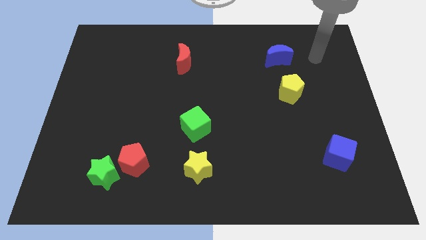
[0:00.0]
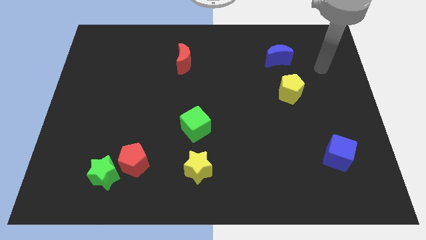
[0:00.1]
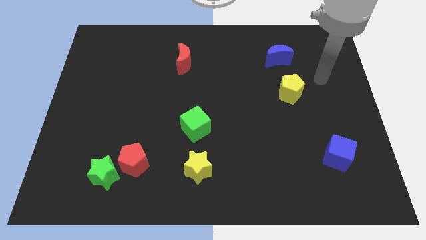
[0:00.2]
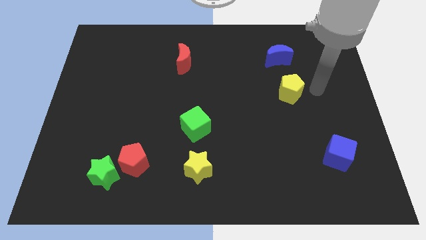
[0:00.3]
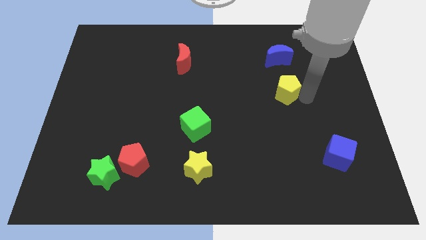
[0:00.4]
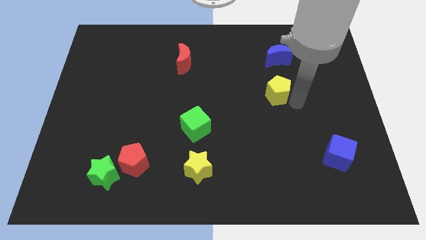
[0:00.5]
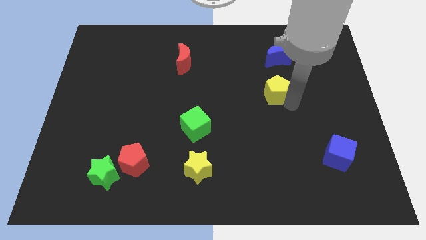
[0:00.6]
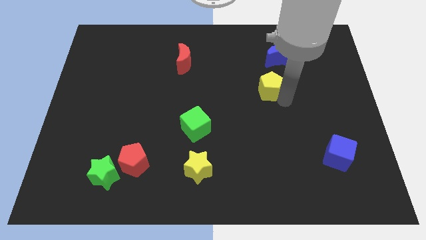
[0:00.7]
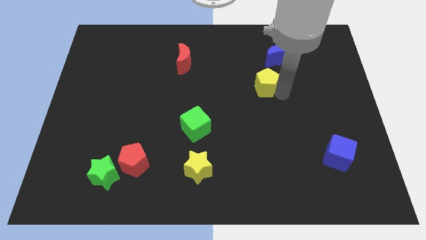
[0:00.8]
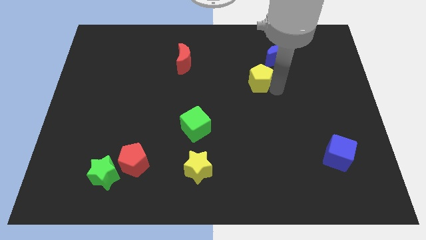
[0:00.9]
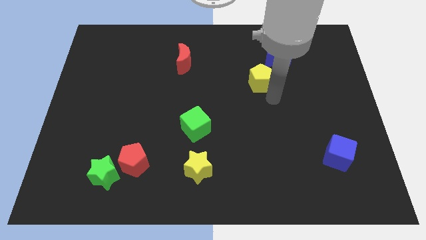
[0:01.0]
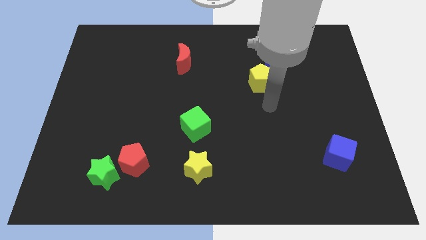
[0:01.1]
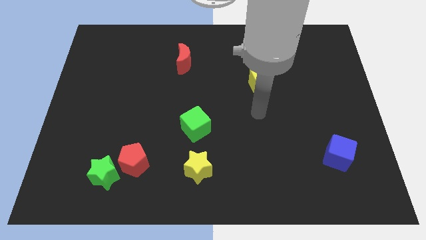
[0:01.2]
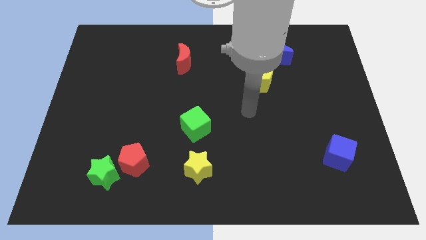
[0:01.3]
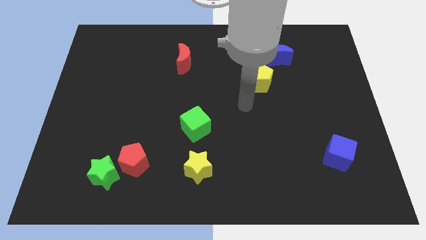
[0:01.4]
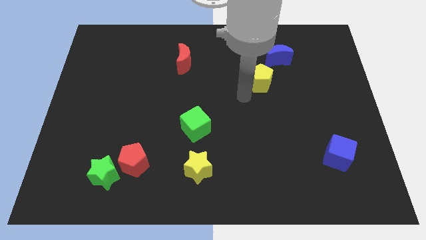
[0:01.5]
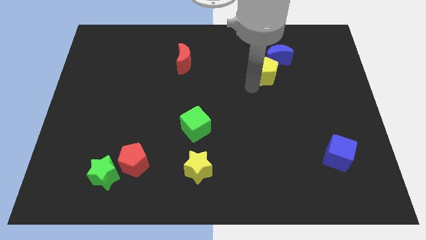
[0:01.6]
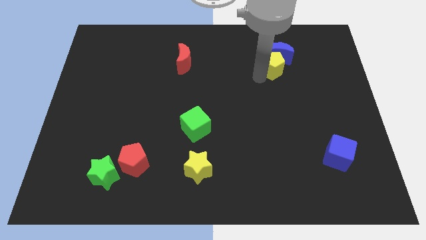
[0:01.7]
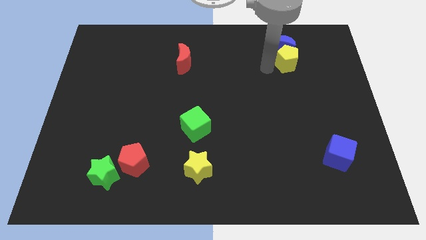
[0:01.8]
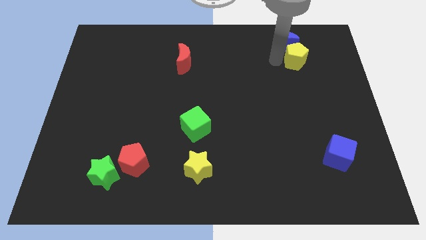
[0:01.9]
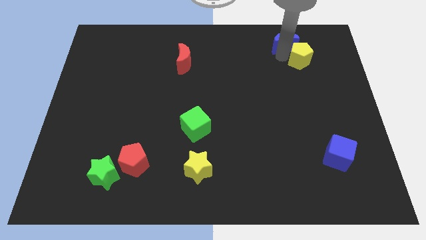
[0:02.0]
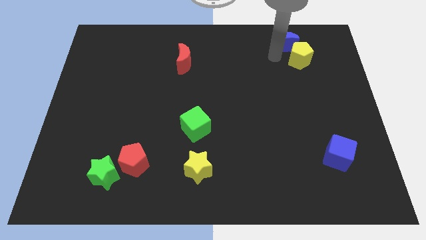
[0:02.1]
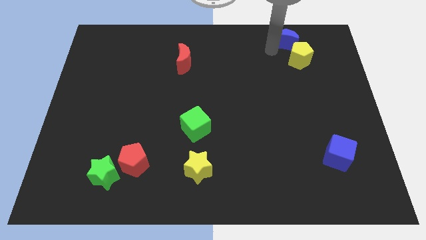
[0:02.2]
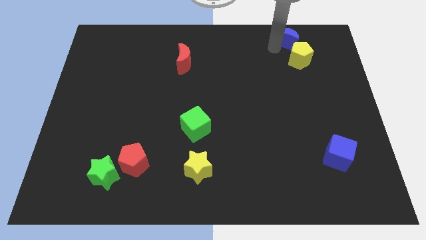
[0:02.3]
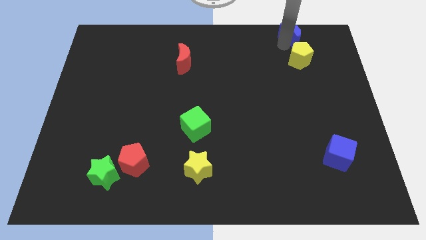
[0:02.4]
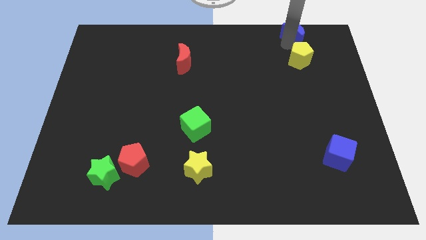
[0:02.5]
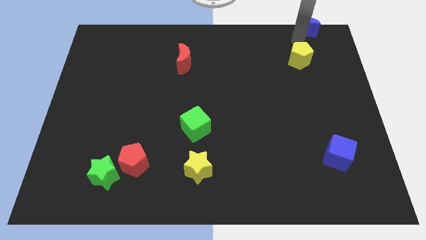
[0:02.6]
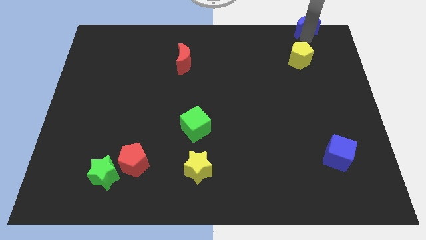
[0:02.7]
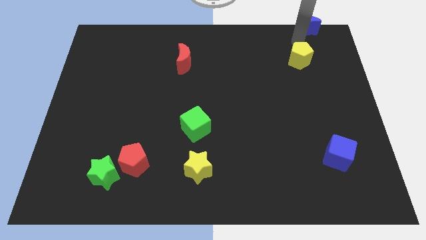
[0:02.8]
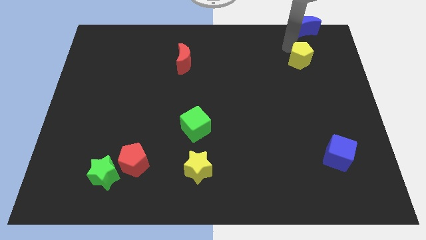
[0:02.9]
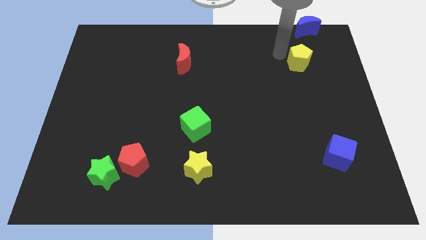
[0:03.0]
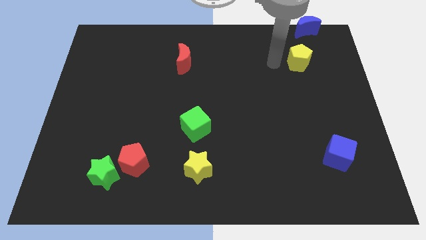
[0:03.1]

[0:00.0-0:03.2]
move the blue moon to the top right with the yellow pentagon

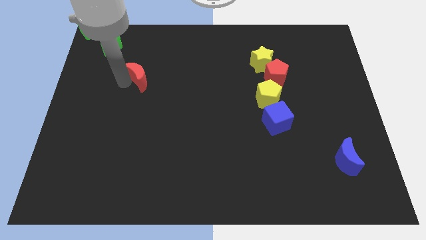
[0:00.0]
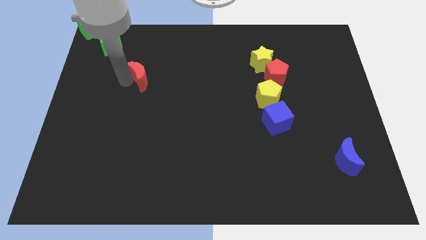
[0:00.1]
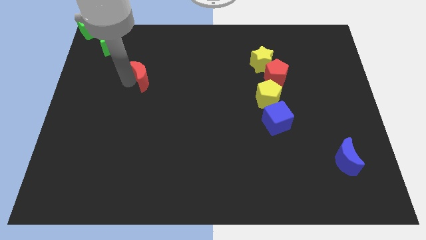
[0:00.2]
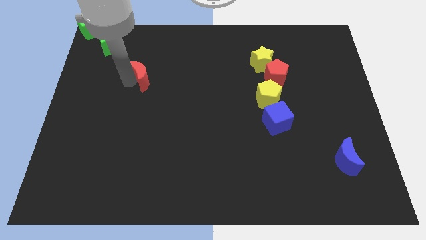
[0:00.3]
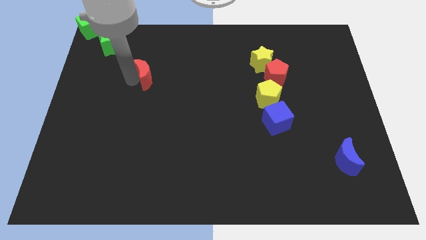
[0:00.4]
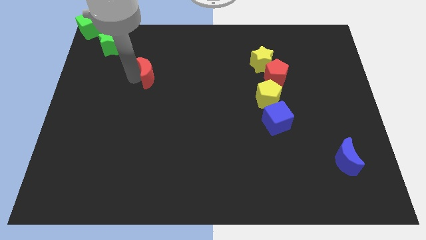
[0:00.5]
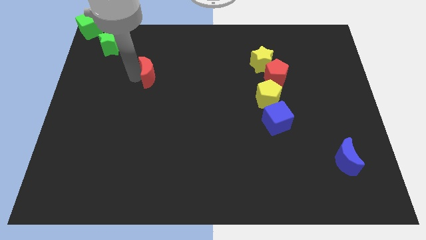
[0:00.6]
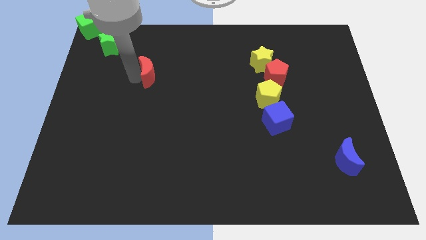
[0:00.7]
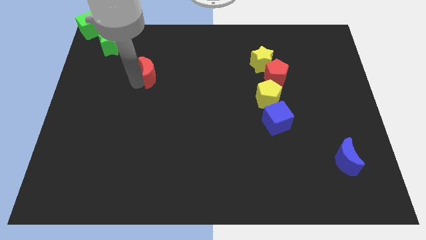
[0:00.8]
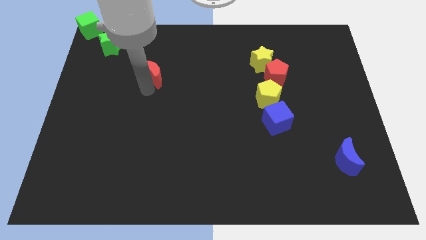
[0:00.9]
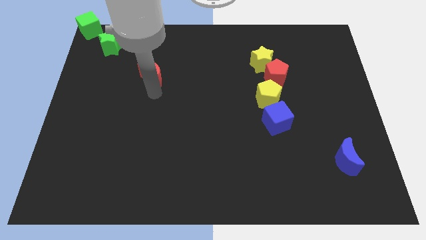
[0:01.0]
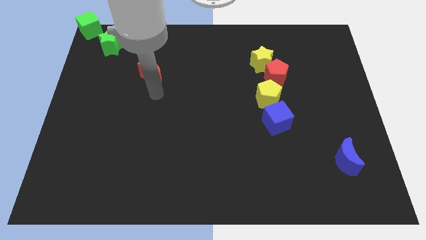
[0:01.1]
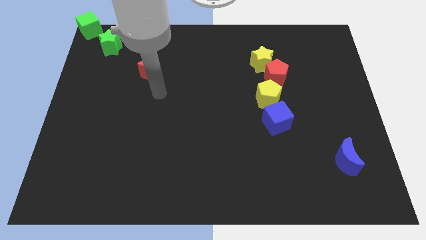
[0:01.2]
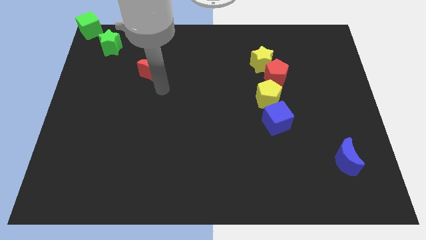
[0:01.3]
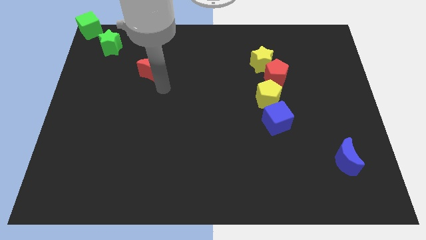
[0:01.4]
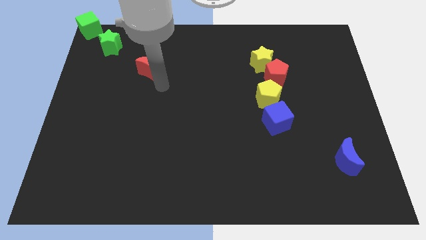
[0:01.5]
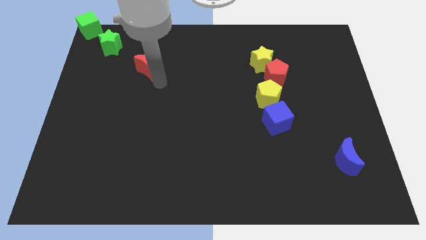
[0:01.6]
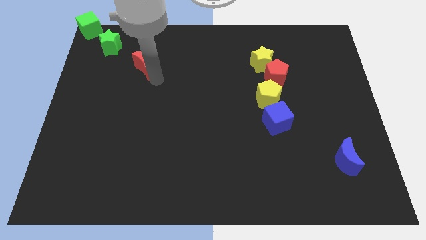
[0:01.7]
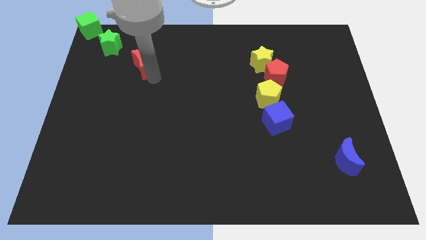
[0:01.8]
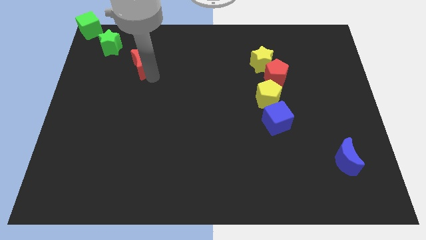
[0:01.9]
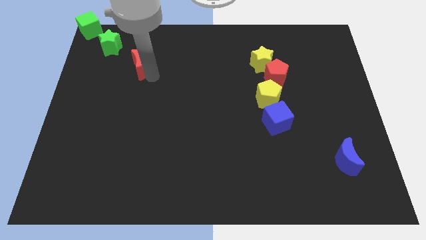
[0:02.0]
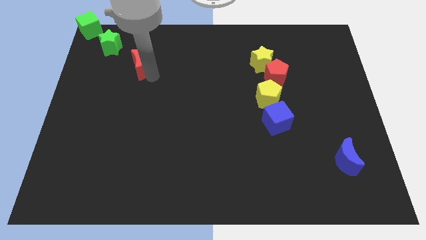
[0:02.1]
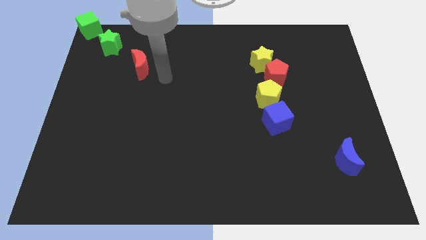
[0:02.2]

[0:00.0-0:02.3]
place the red crescent near to the green star

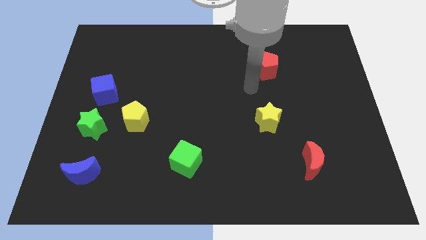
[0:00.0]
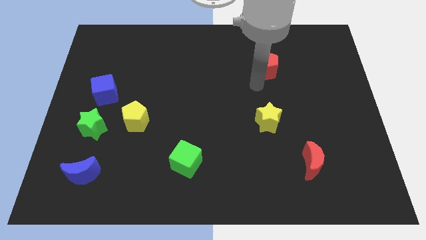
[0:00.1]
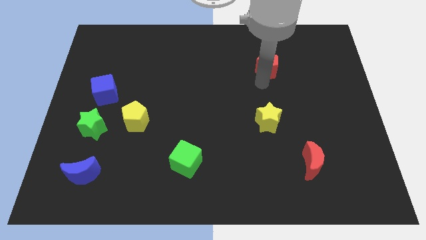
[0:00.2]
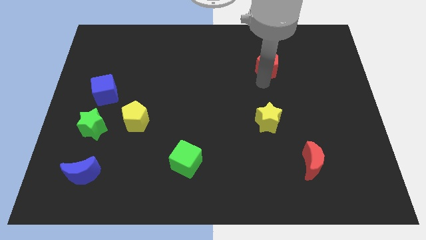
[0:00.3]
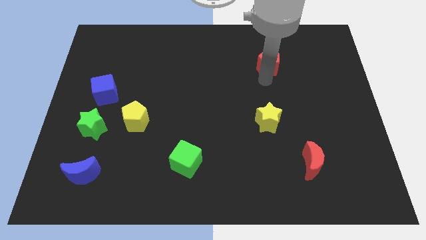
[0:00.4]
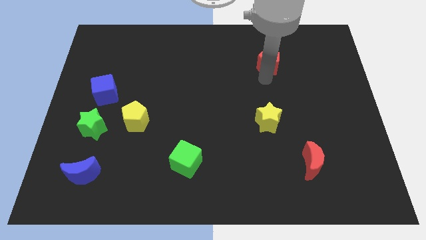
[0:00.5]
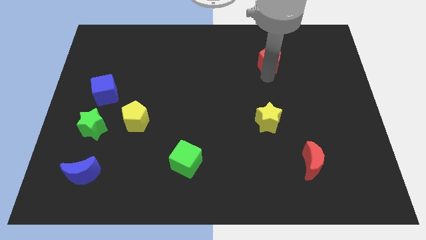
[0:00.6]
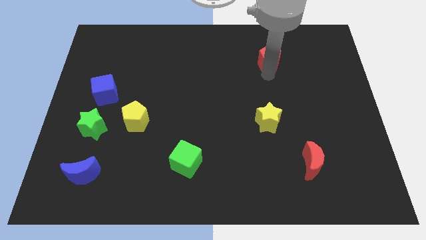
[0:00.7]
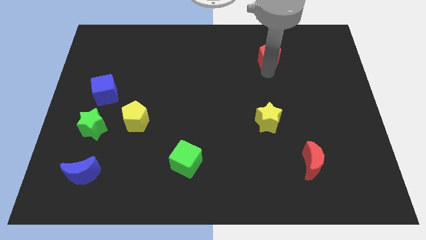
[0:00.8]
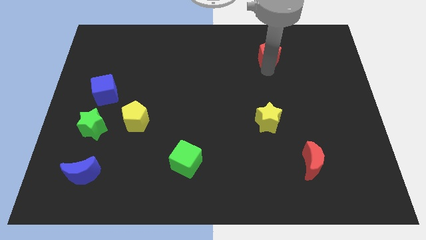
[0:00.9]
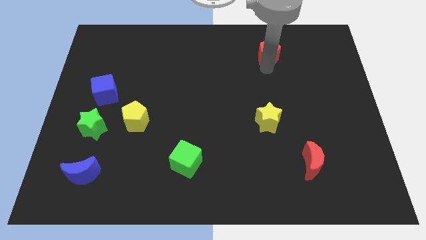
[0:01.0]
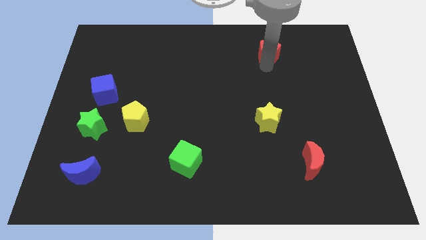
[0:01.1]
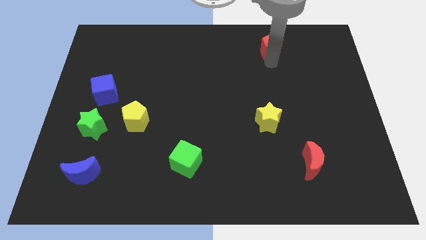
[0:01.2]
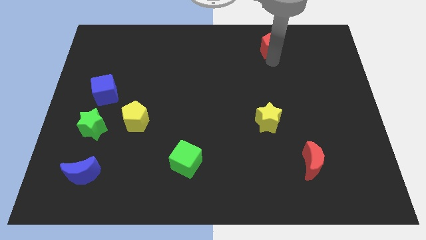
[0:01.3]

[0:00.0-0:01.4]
move red pentagon to the top side of the board

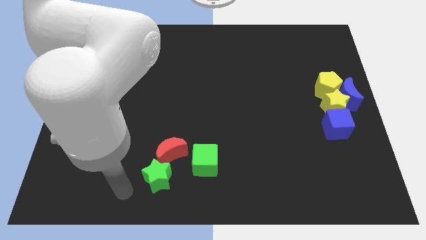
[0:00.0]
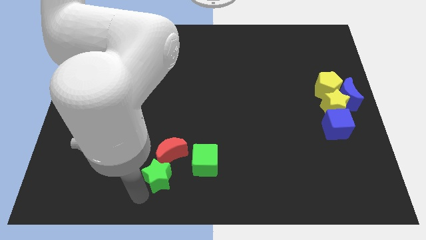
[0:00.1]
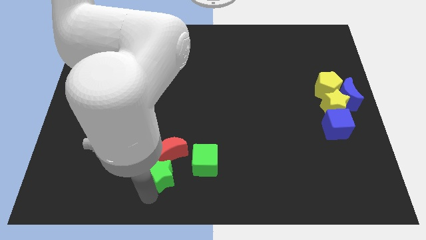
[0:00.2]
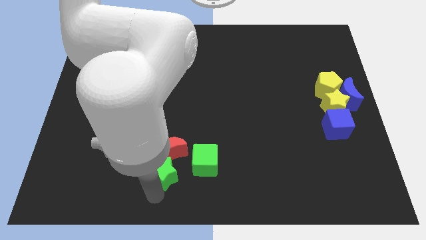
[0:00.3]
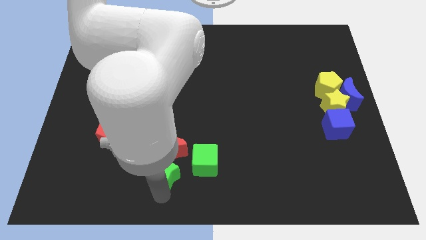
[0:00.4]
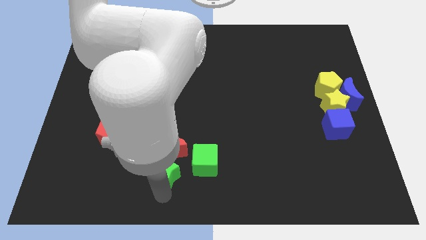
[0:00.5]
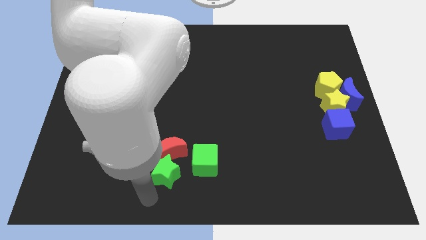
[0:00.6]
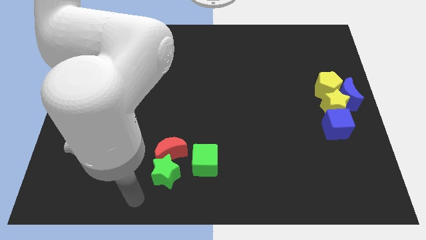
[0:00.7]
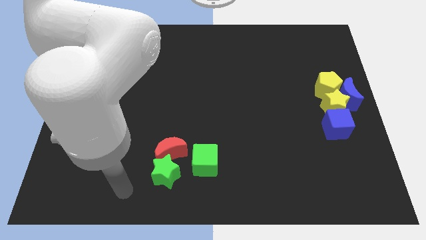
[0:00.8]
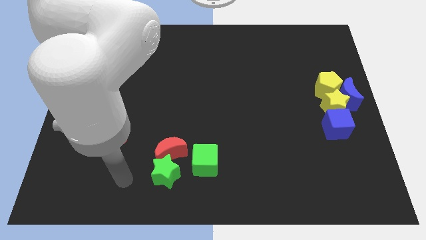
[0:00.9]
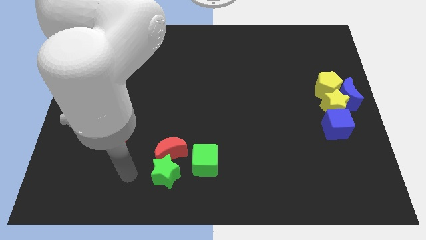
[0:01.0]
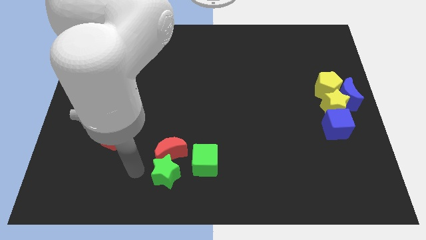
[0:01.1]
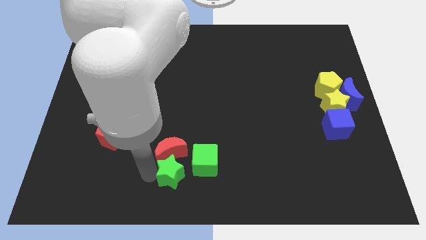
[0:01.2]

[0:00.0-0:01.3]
move the green star into the red crescent

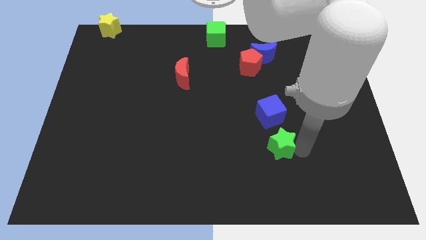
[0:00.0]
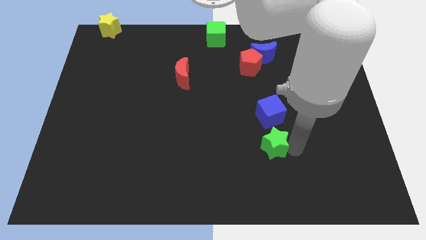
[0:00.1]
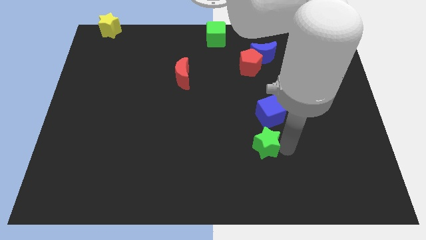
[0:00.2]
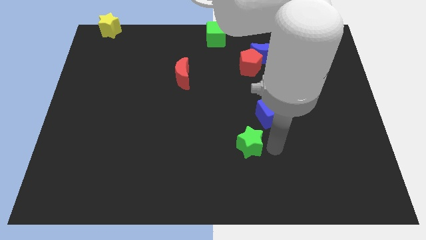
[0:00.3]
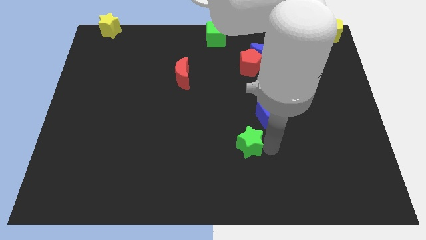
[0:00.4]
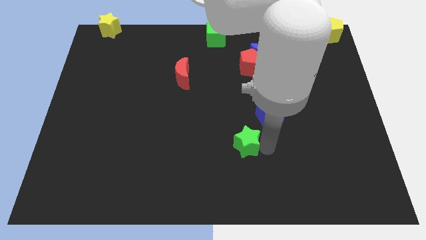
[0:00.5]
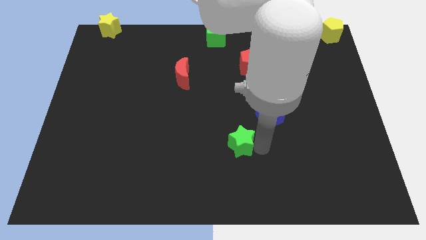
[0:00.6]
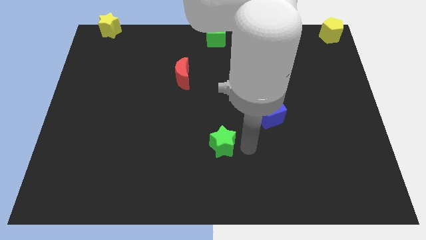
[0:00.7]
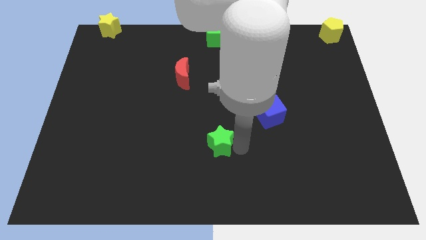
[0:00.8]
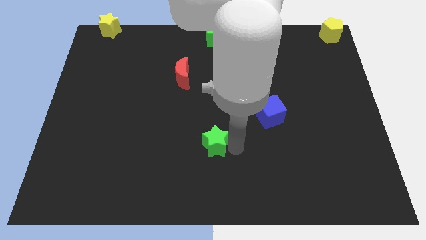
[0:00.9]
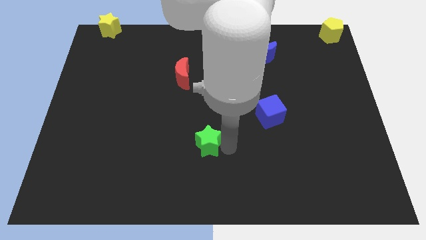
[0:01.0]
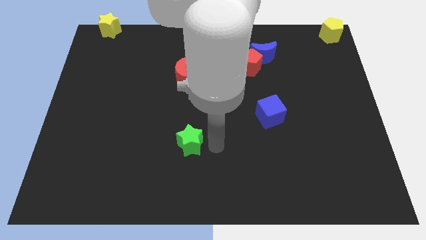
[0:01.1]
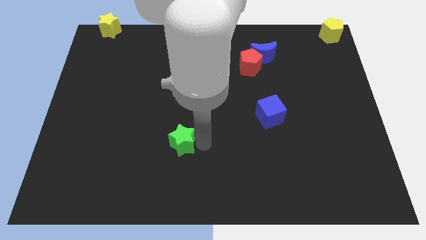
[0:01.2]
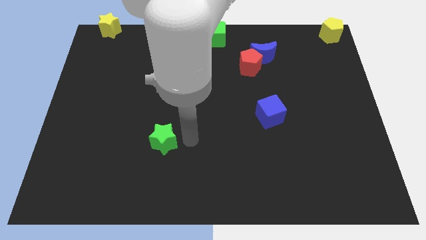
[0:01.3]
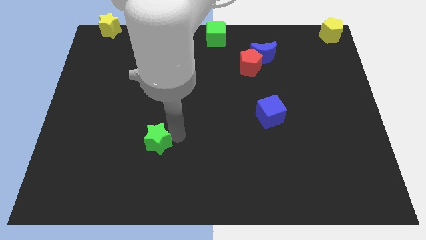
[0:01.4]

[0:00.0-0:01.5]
push the green star towards left
